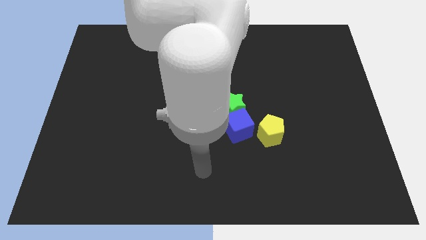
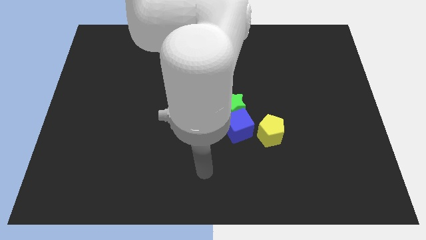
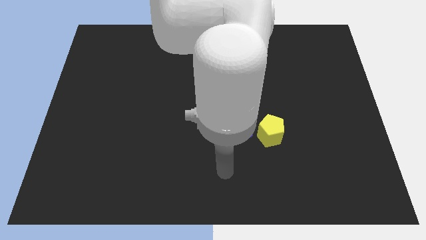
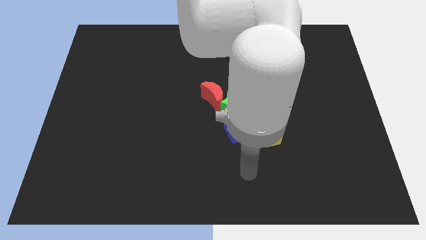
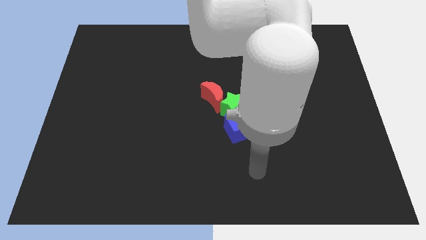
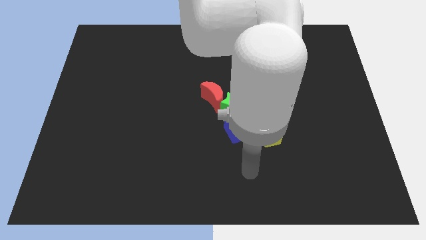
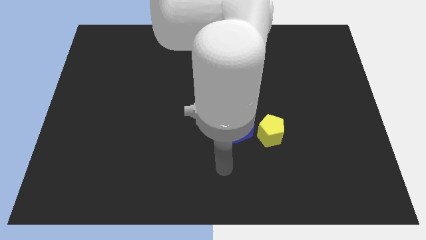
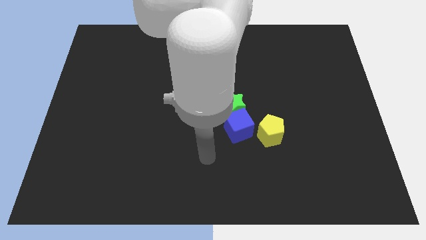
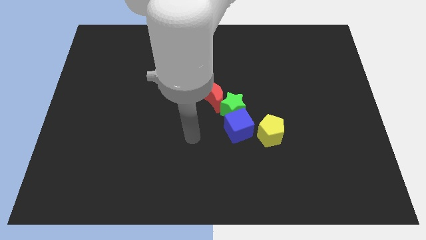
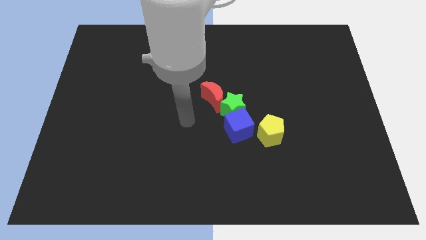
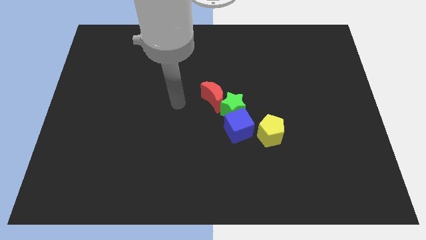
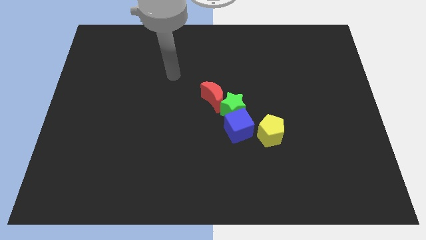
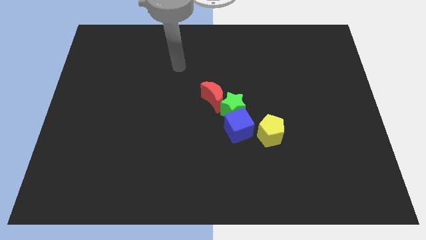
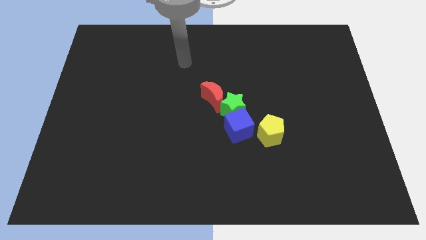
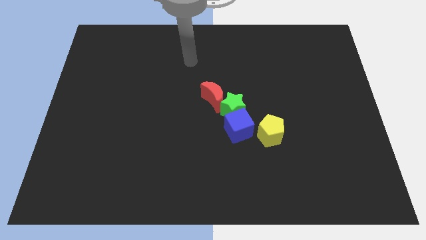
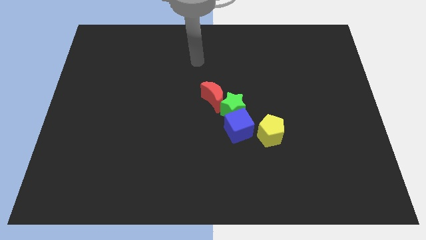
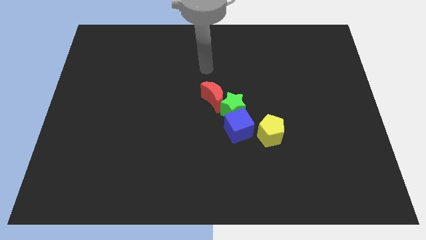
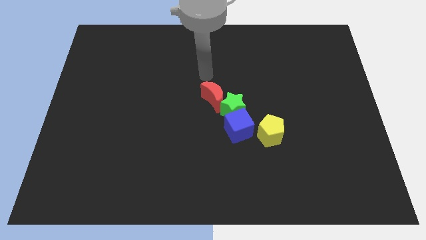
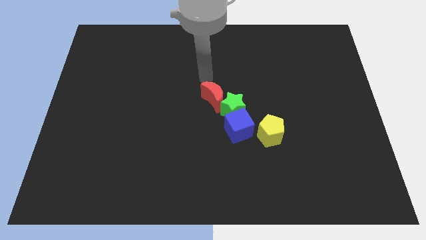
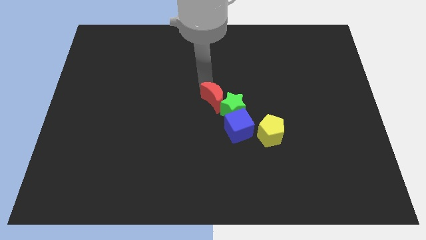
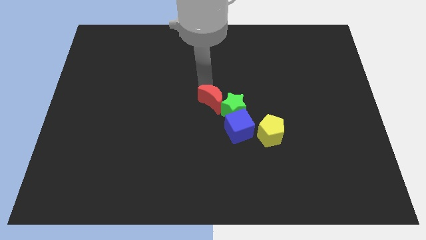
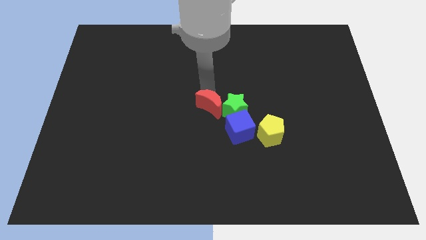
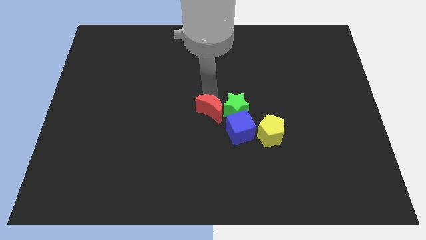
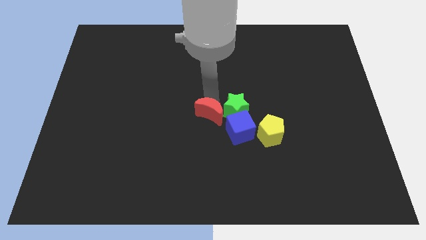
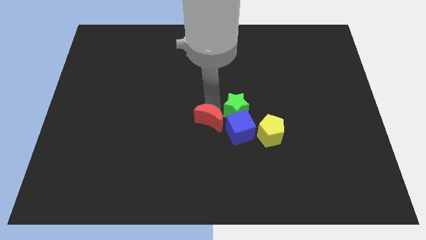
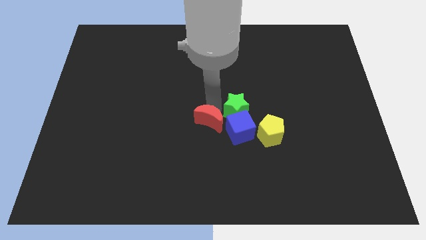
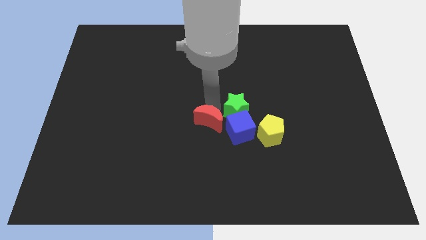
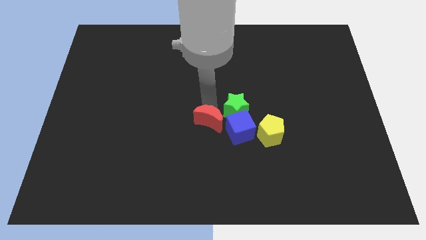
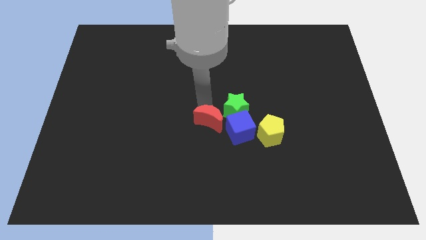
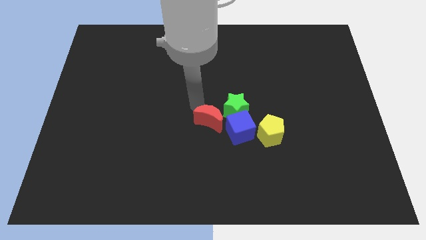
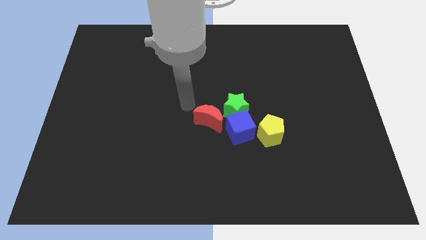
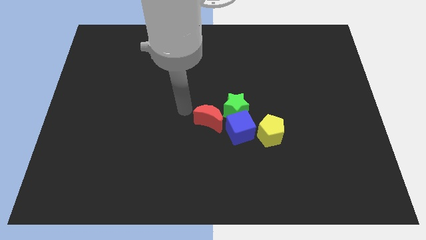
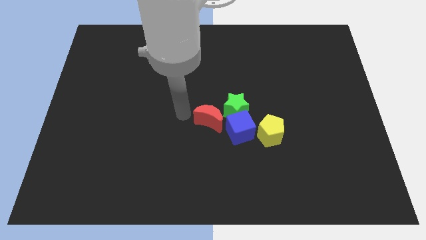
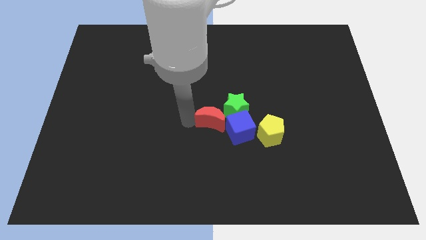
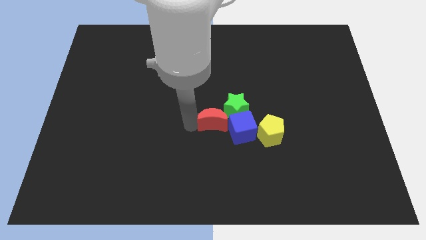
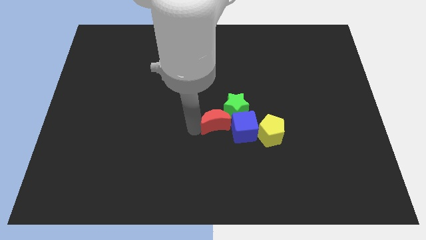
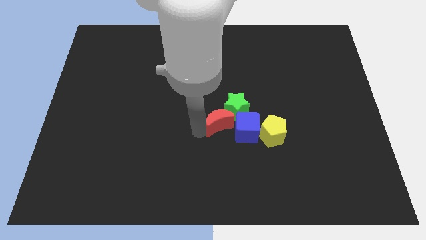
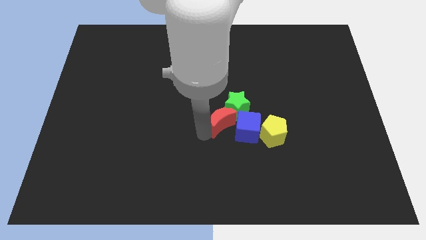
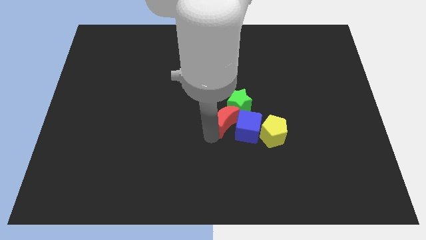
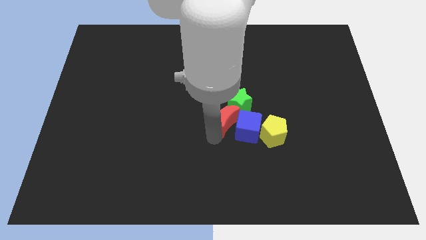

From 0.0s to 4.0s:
put the red block close to the blue cube

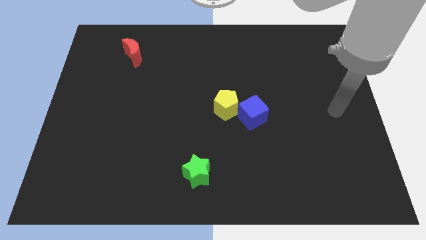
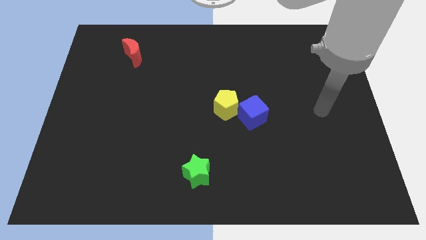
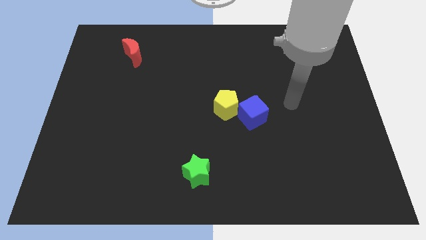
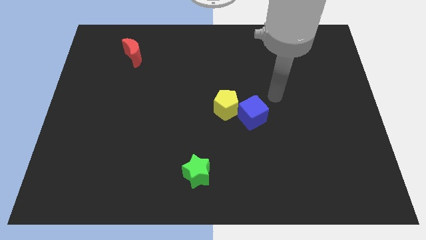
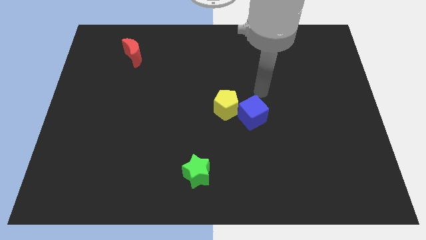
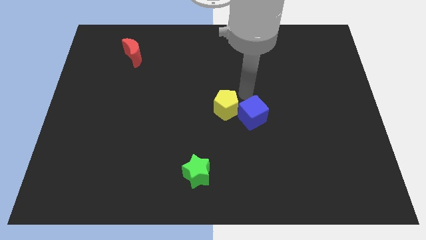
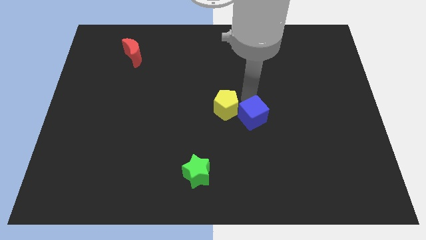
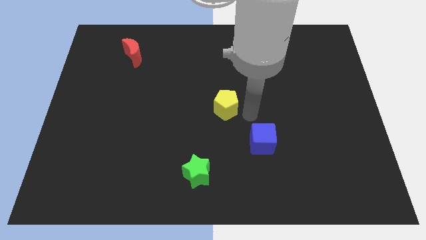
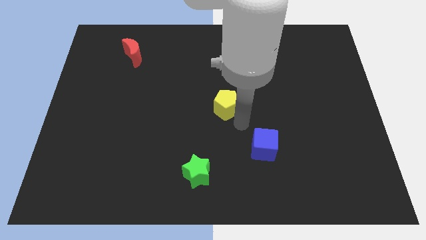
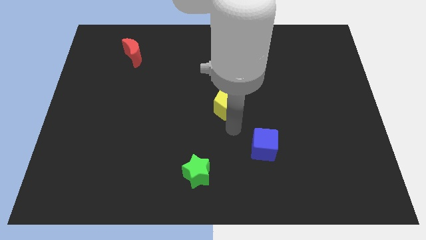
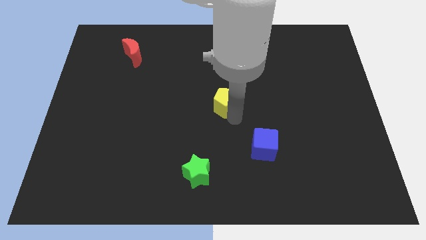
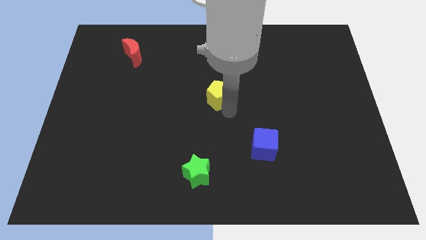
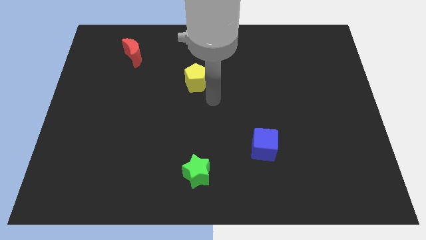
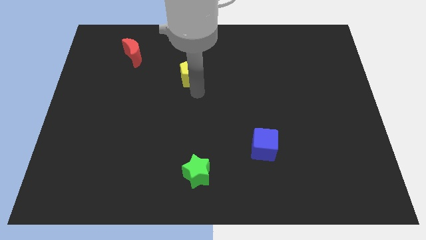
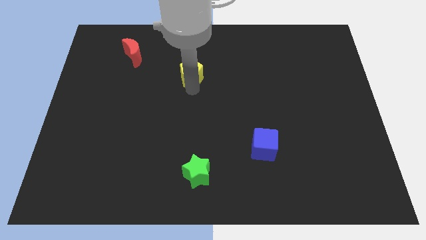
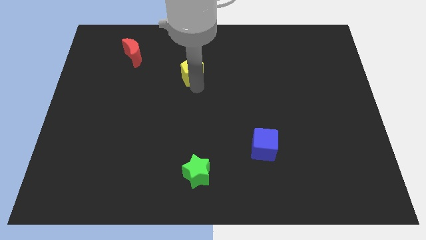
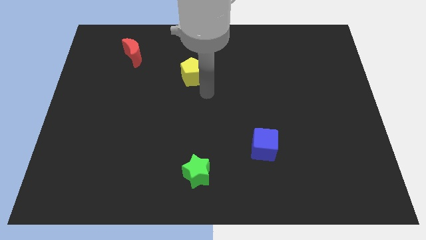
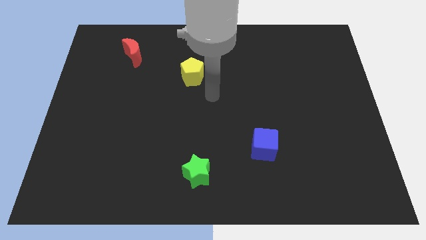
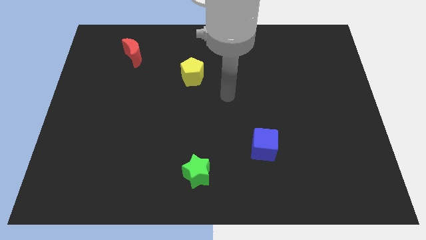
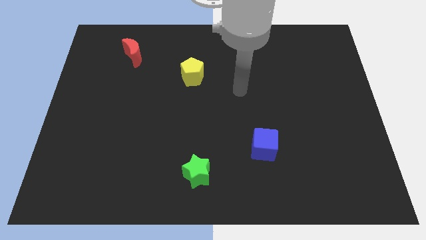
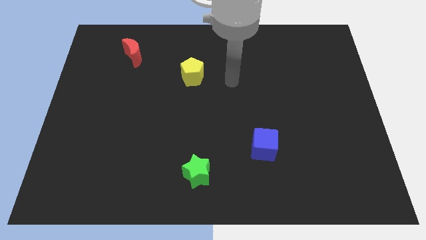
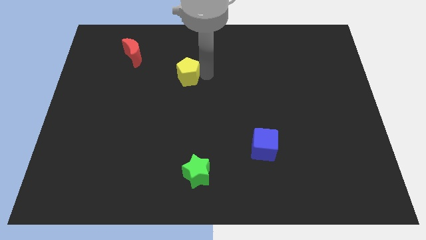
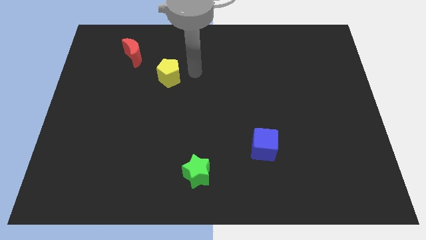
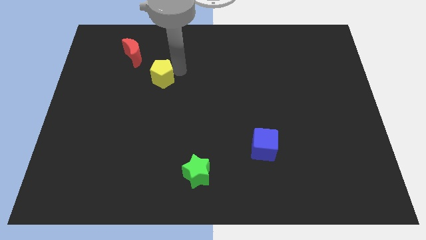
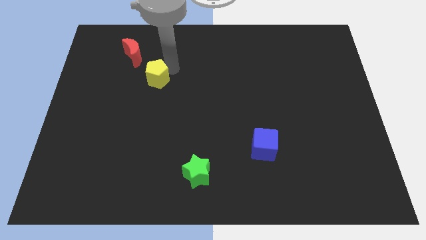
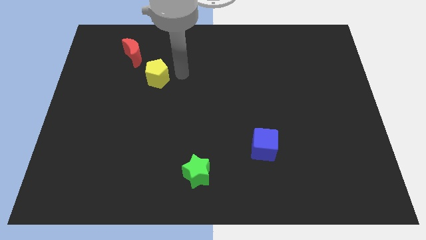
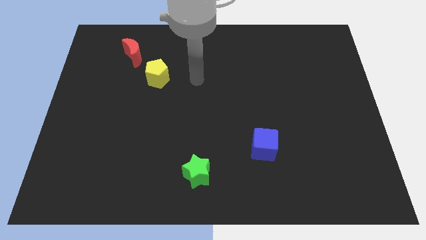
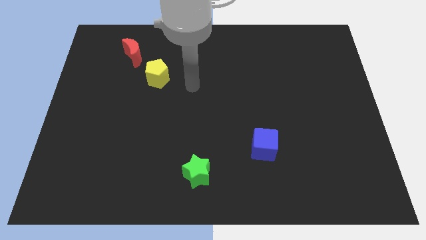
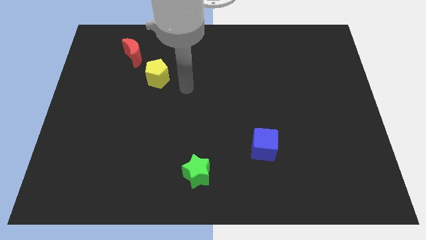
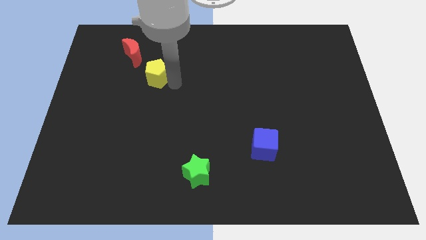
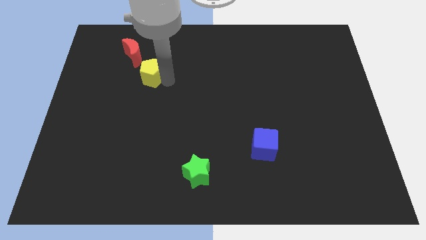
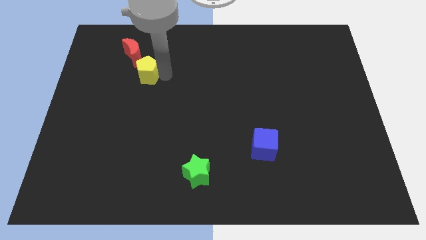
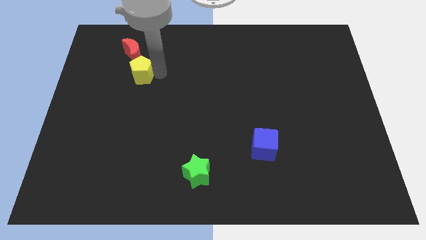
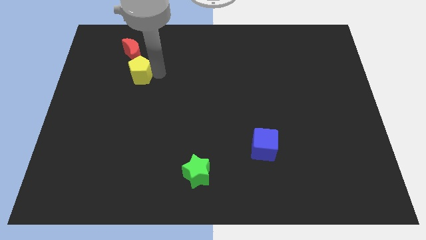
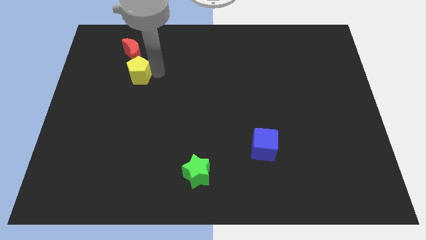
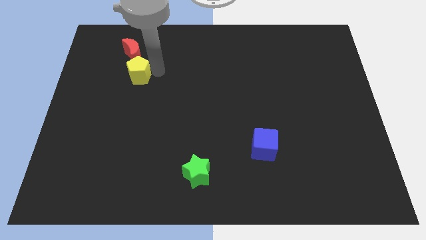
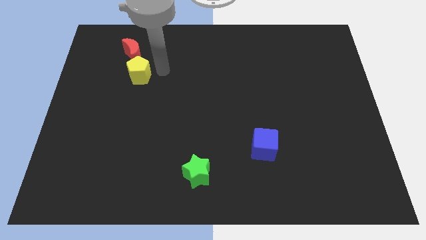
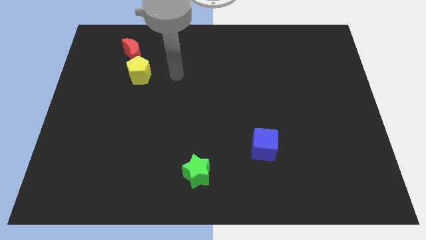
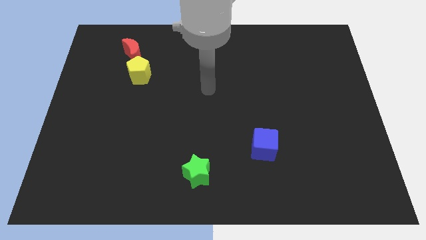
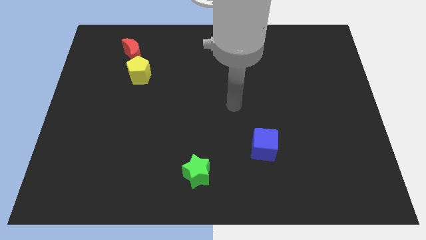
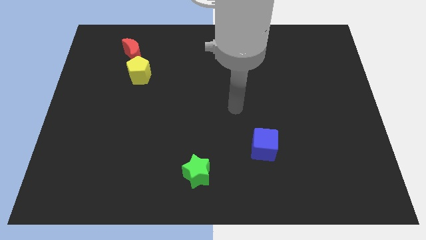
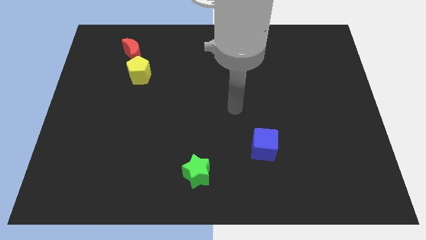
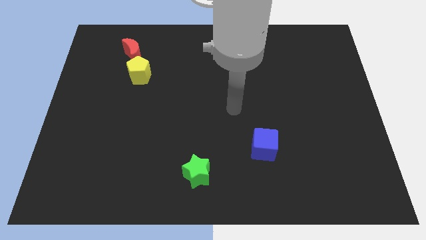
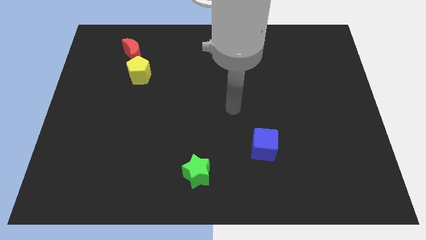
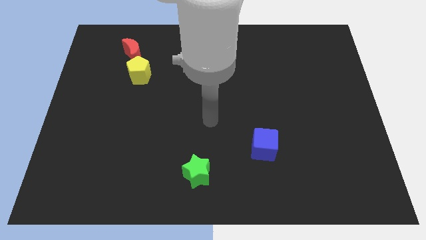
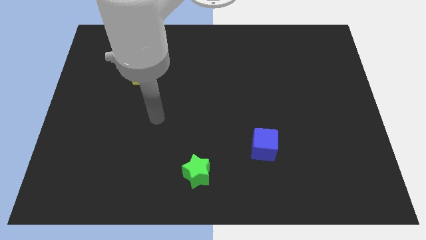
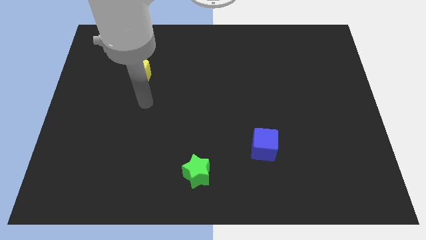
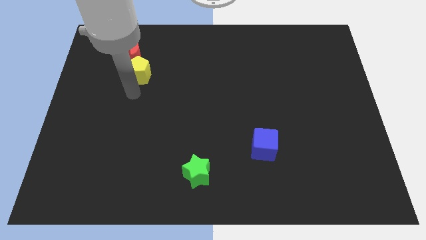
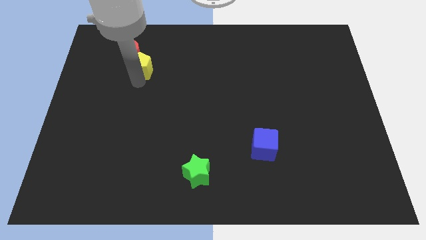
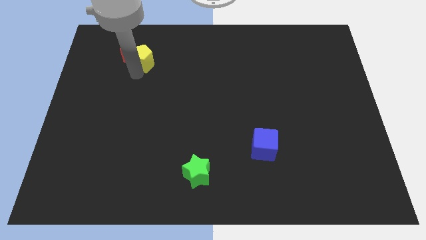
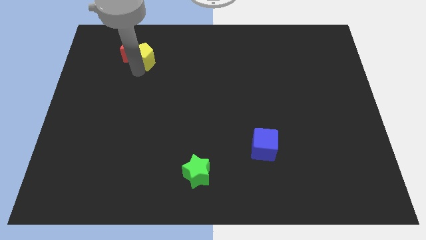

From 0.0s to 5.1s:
move the pentagon close to the red block
